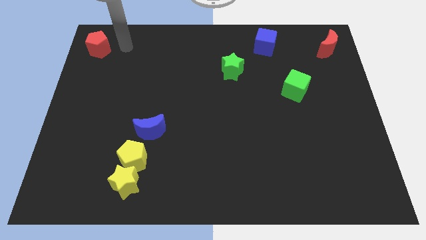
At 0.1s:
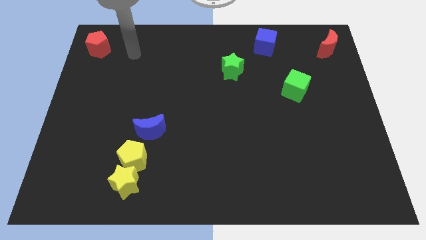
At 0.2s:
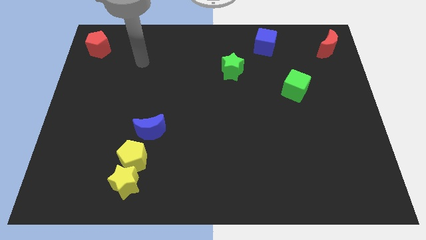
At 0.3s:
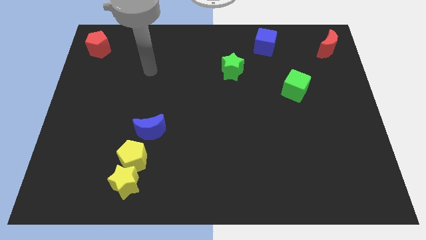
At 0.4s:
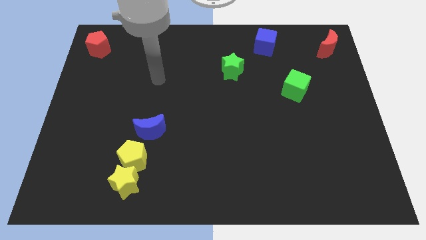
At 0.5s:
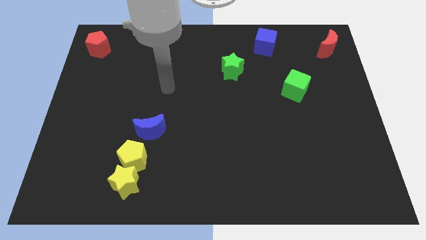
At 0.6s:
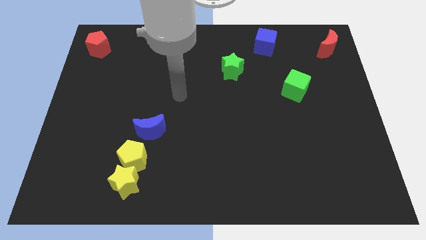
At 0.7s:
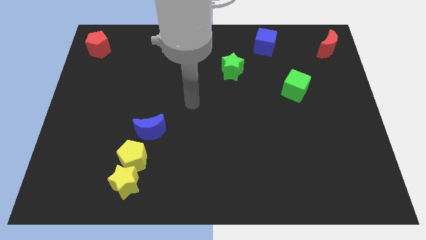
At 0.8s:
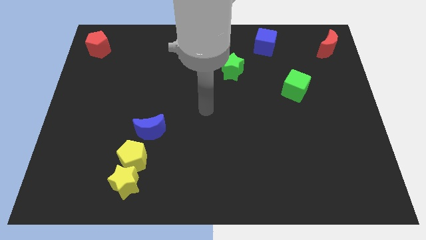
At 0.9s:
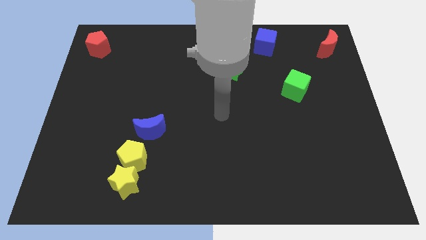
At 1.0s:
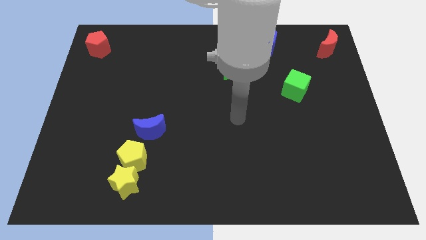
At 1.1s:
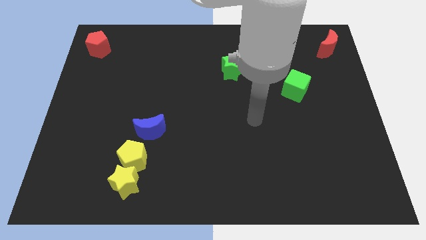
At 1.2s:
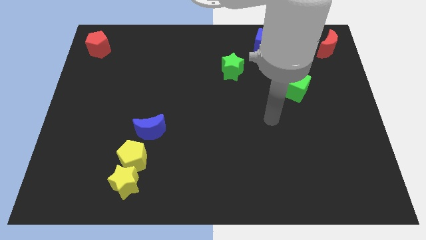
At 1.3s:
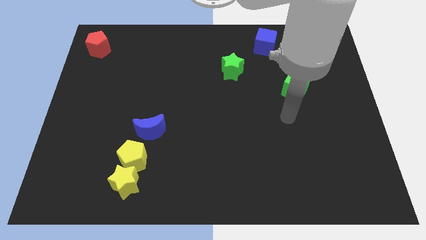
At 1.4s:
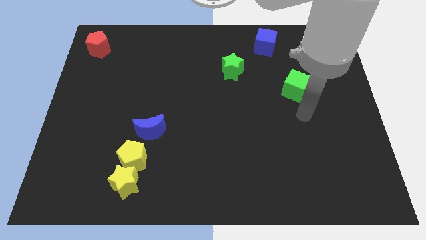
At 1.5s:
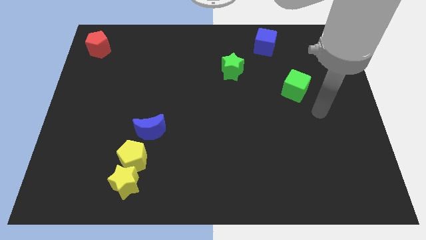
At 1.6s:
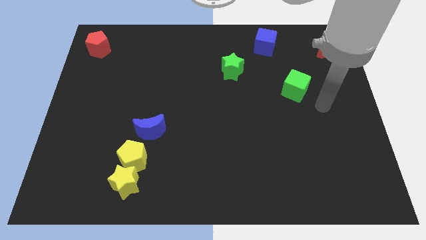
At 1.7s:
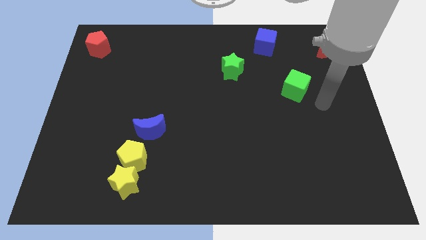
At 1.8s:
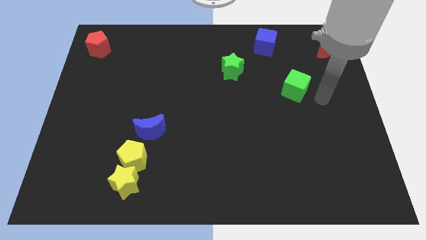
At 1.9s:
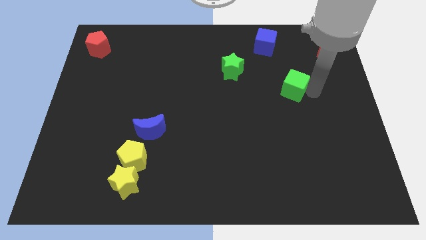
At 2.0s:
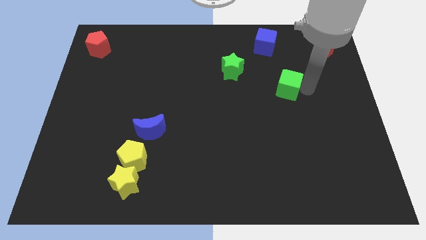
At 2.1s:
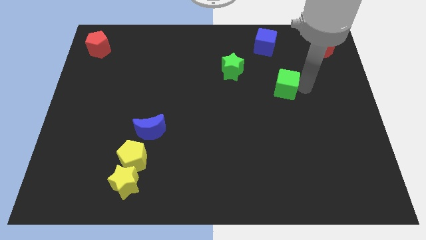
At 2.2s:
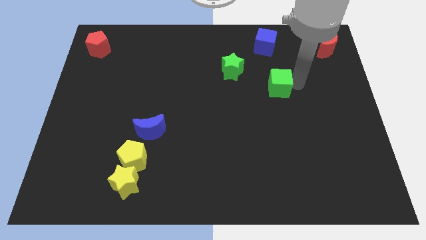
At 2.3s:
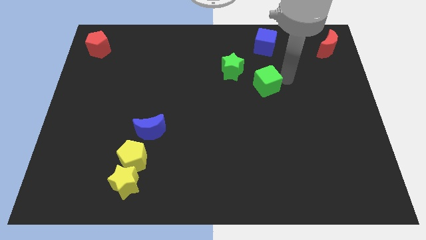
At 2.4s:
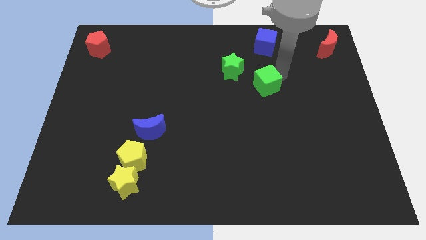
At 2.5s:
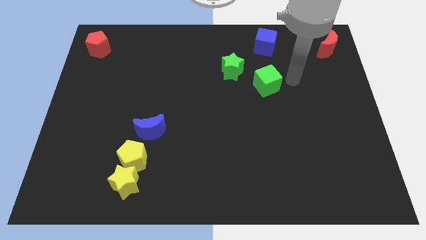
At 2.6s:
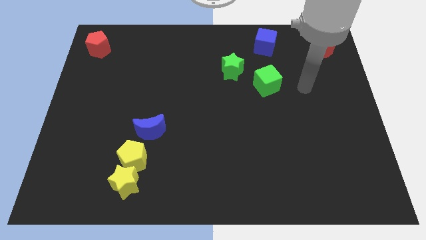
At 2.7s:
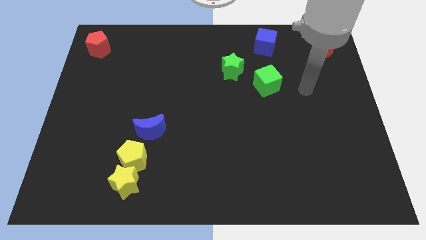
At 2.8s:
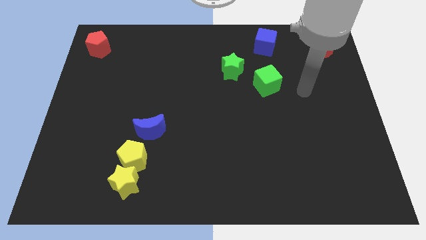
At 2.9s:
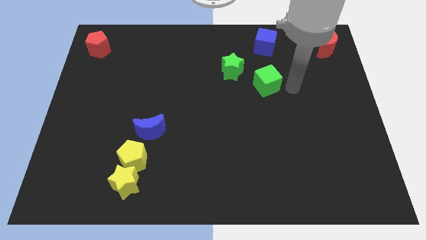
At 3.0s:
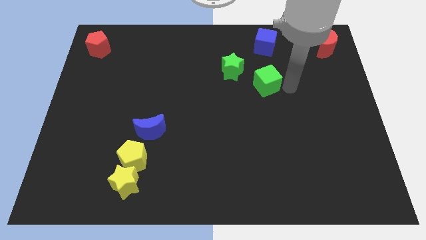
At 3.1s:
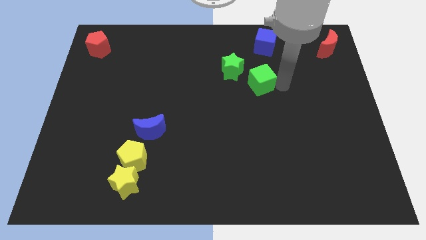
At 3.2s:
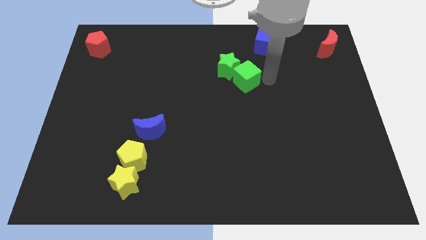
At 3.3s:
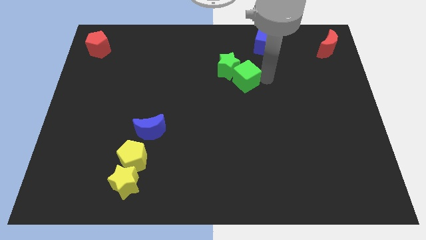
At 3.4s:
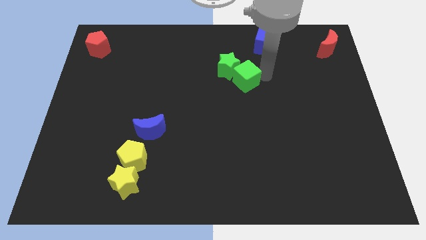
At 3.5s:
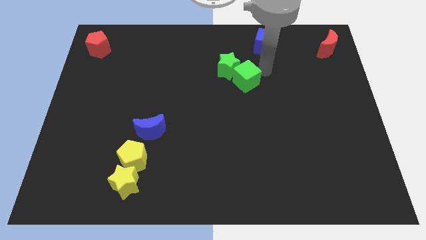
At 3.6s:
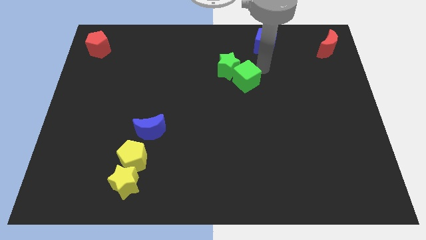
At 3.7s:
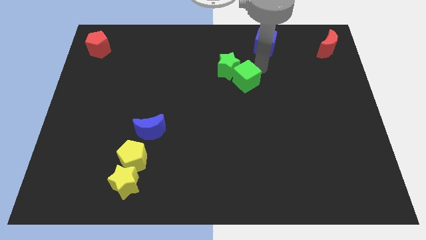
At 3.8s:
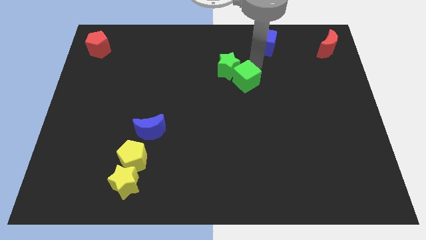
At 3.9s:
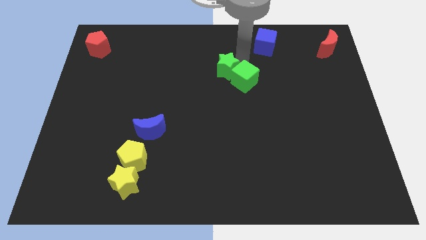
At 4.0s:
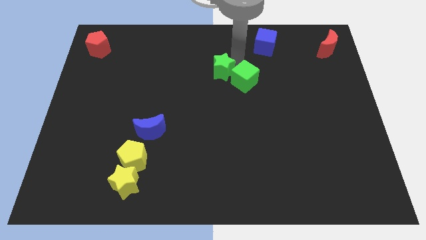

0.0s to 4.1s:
push the green cube into the green star

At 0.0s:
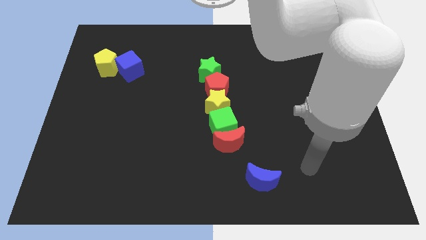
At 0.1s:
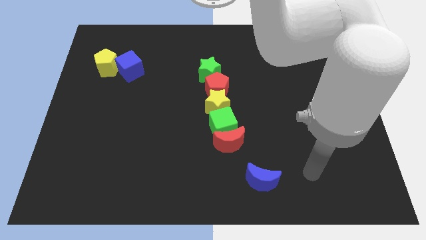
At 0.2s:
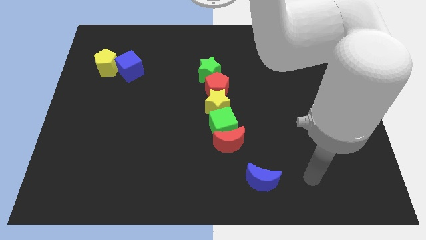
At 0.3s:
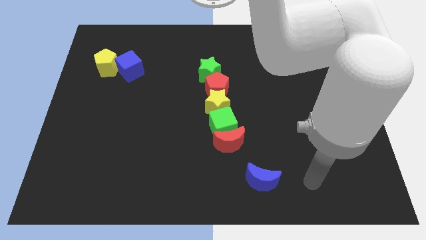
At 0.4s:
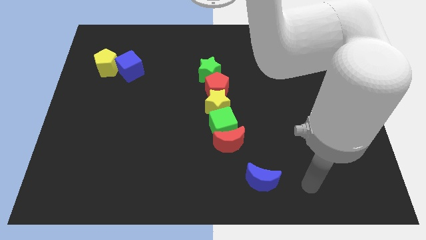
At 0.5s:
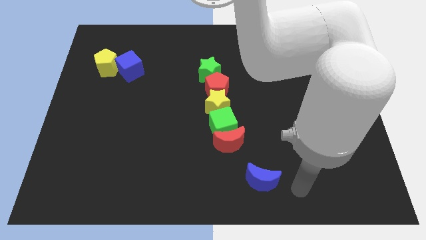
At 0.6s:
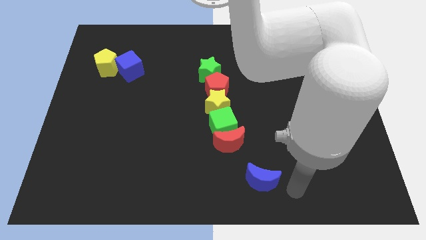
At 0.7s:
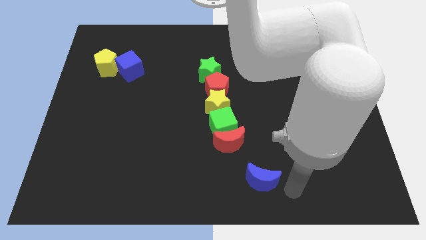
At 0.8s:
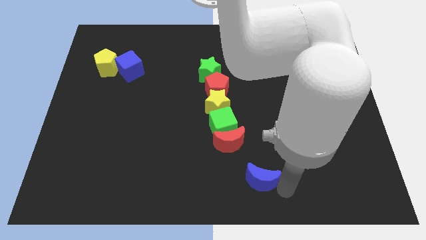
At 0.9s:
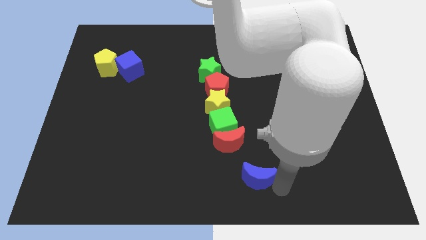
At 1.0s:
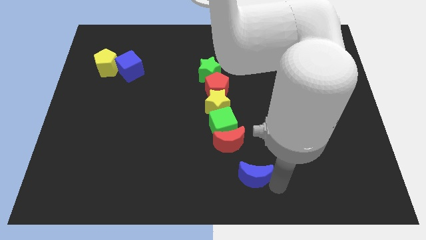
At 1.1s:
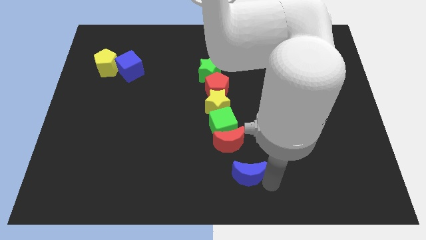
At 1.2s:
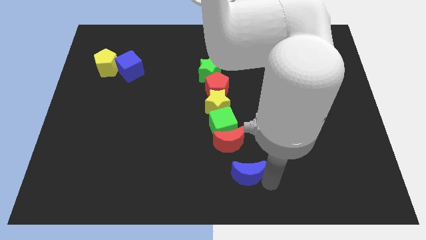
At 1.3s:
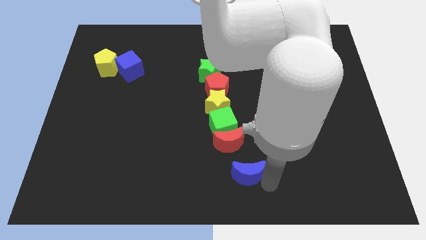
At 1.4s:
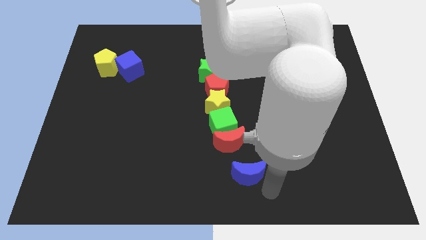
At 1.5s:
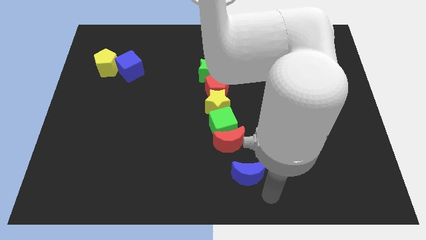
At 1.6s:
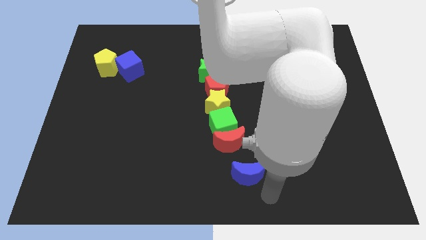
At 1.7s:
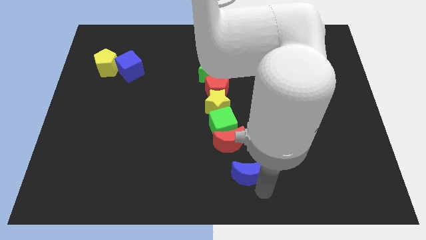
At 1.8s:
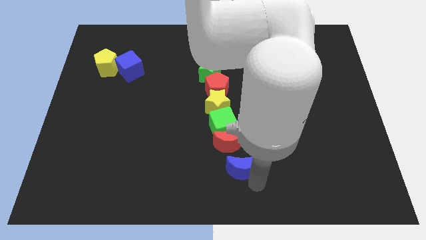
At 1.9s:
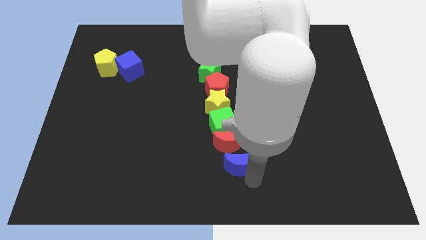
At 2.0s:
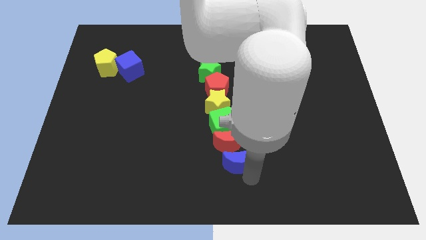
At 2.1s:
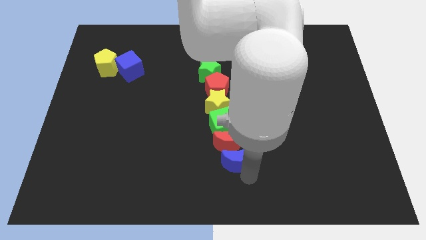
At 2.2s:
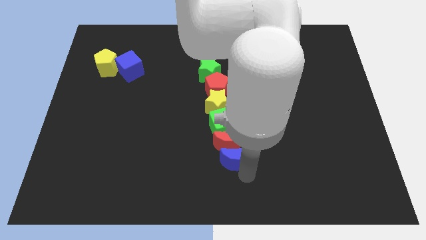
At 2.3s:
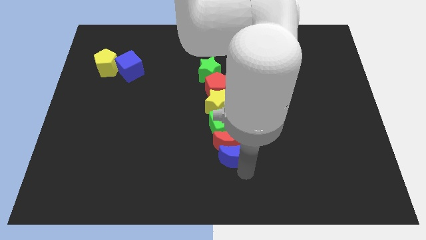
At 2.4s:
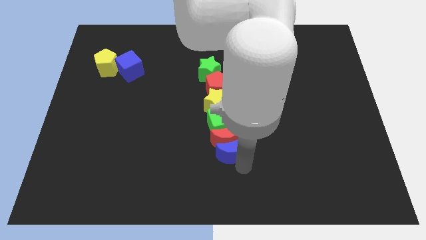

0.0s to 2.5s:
push the blue moon into the red moon at the bottom

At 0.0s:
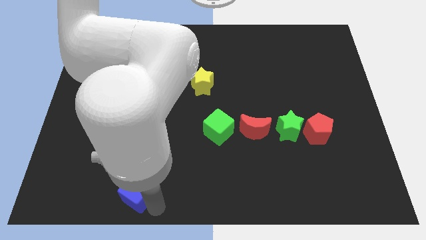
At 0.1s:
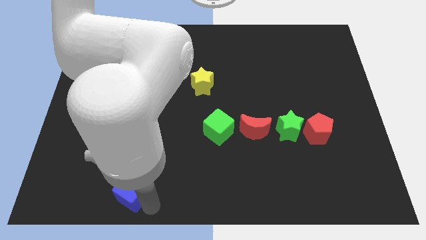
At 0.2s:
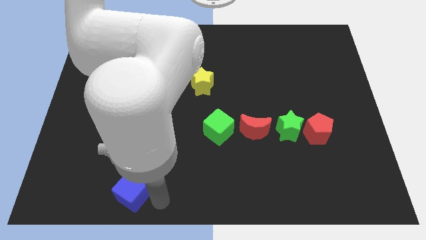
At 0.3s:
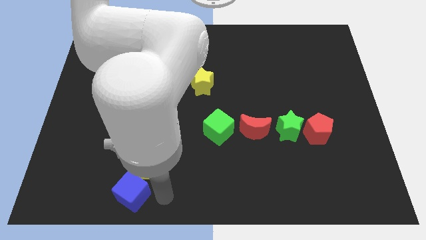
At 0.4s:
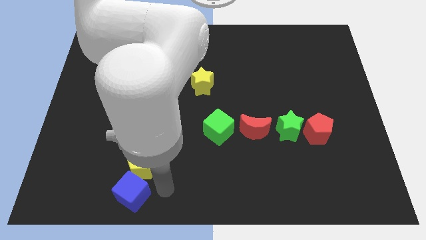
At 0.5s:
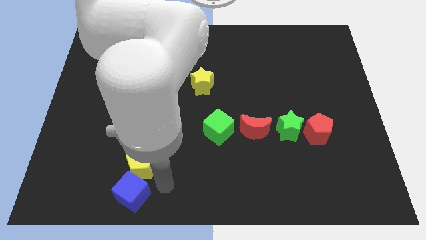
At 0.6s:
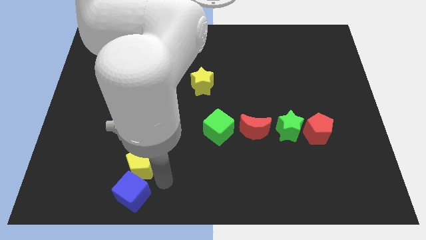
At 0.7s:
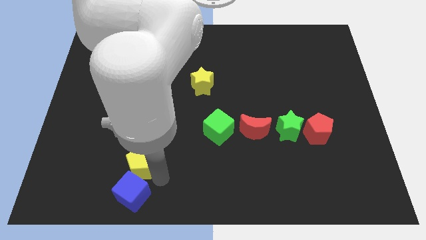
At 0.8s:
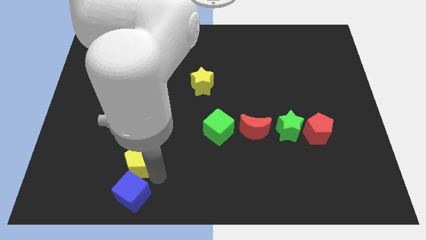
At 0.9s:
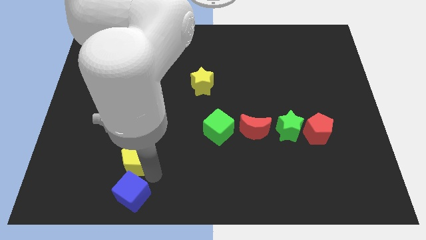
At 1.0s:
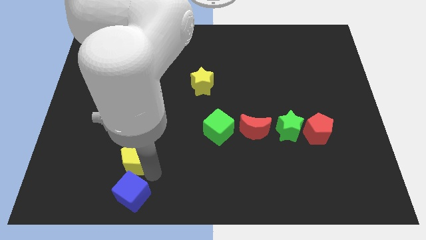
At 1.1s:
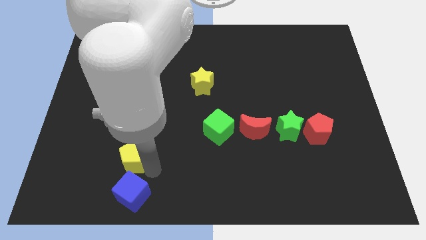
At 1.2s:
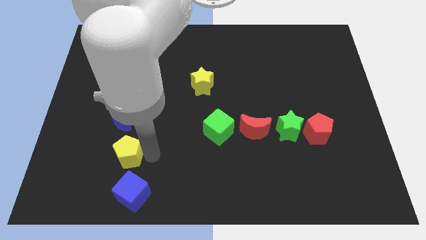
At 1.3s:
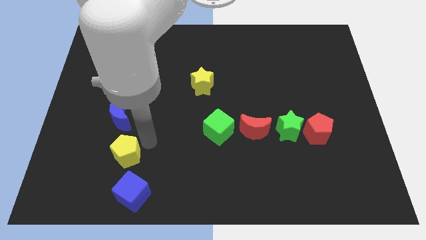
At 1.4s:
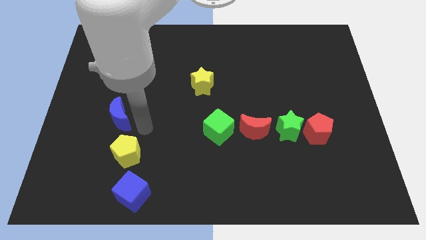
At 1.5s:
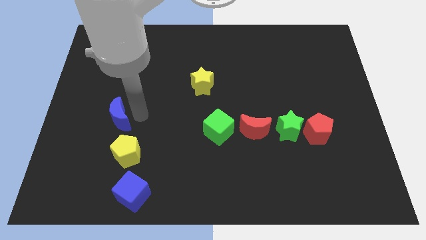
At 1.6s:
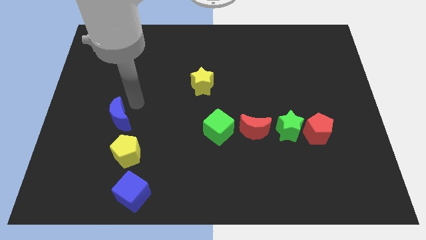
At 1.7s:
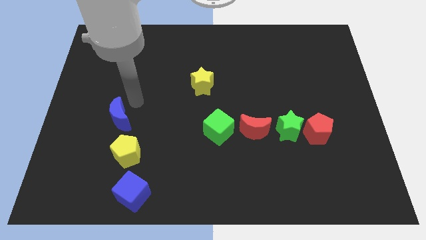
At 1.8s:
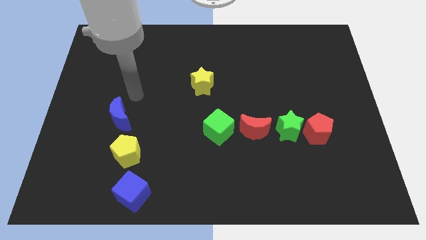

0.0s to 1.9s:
place the yellow pentagon in between the blue cube and blue crescent

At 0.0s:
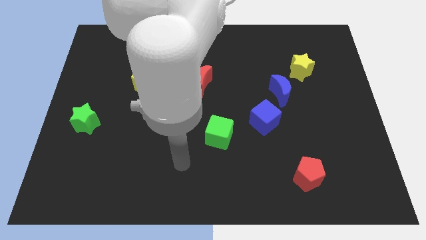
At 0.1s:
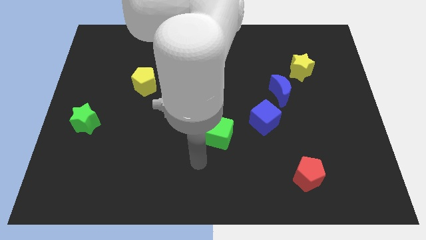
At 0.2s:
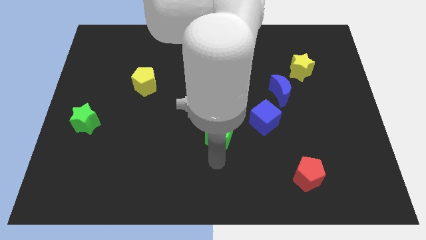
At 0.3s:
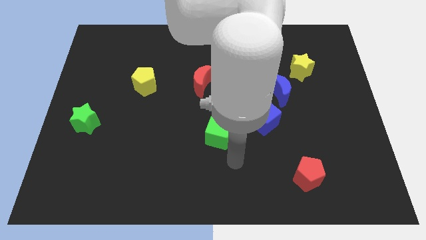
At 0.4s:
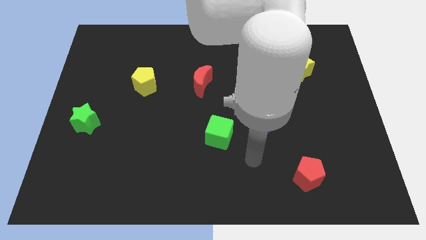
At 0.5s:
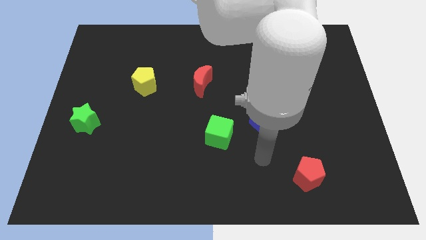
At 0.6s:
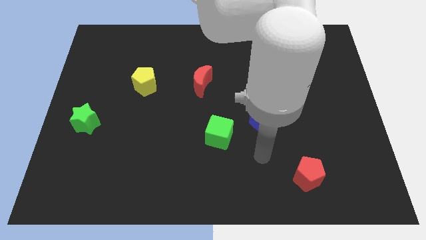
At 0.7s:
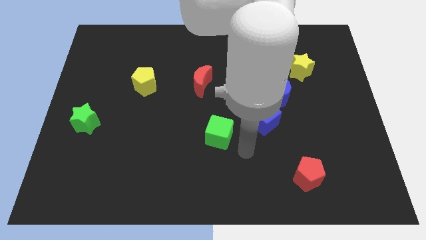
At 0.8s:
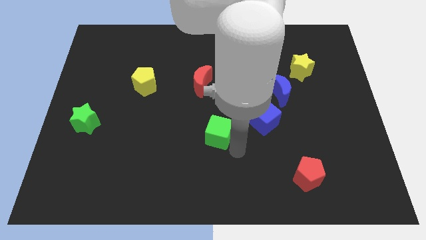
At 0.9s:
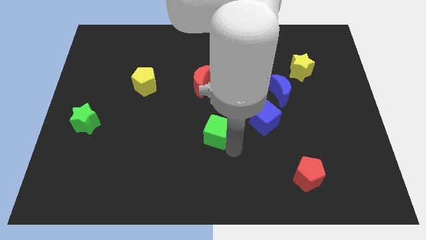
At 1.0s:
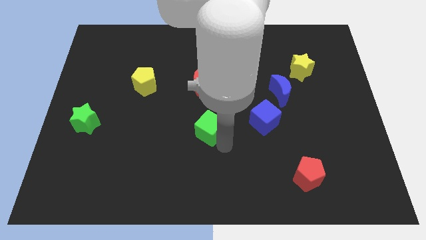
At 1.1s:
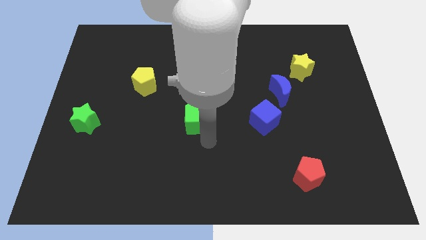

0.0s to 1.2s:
place green cube to the bottom of red moon
